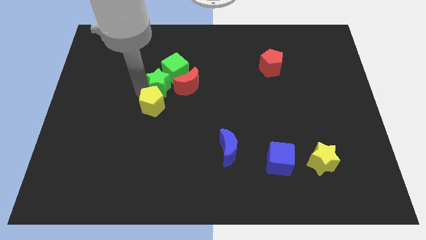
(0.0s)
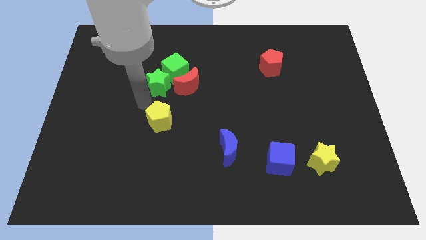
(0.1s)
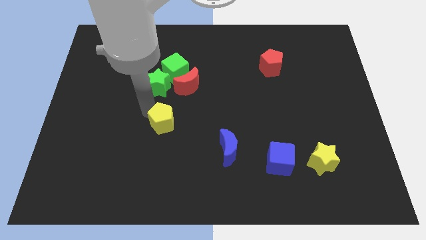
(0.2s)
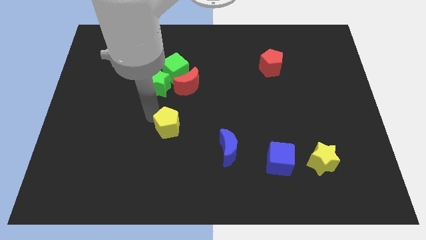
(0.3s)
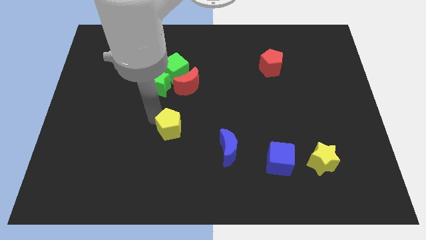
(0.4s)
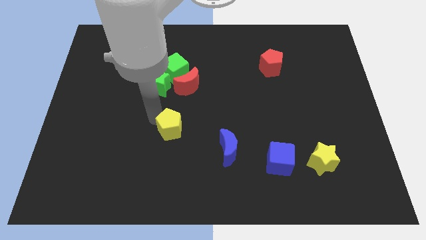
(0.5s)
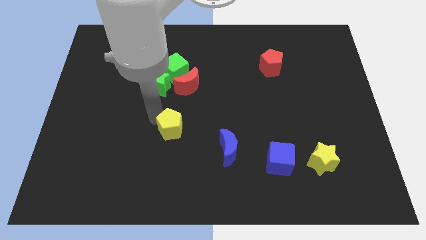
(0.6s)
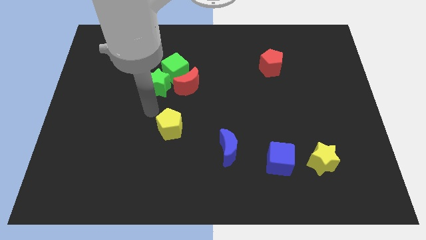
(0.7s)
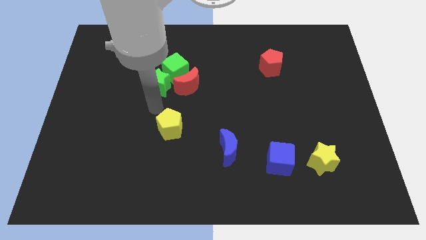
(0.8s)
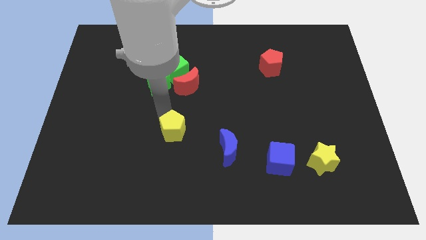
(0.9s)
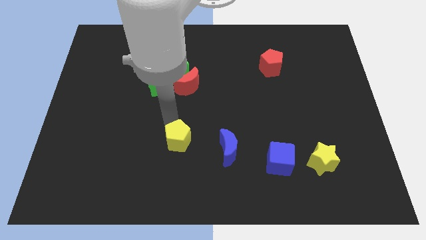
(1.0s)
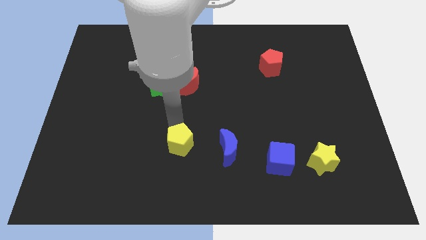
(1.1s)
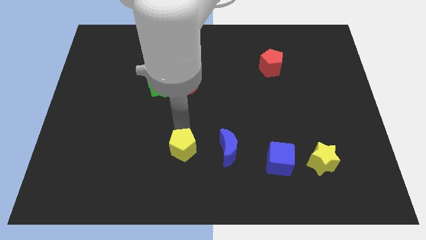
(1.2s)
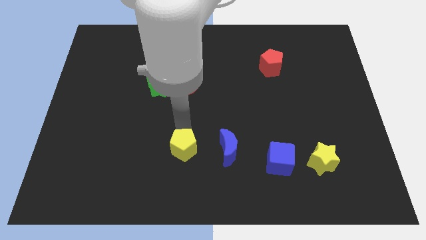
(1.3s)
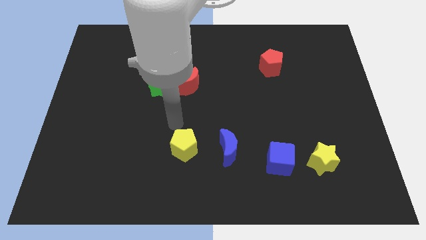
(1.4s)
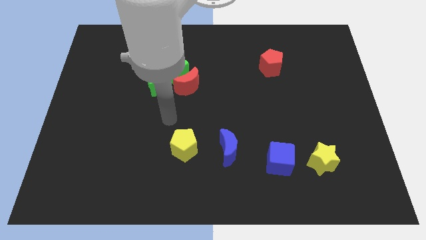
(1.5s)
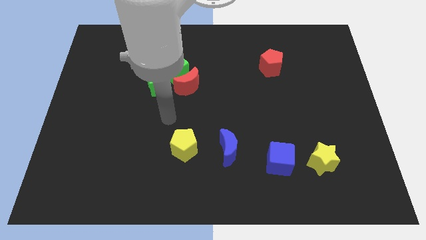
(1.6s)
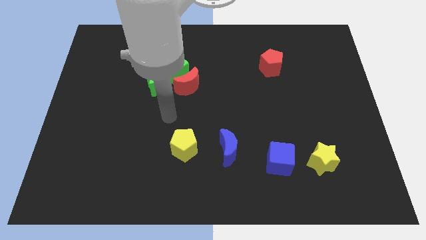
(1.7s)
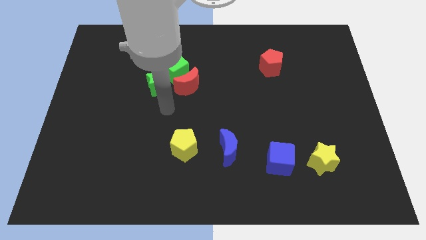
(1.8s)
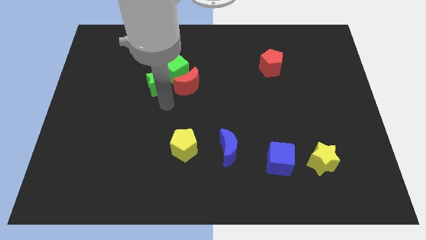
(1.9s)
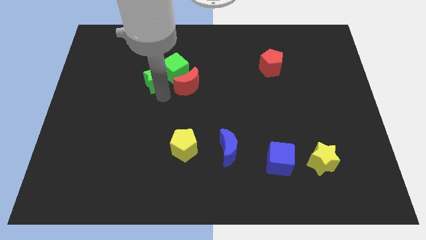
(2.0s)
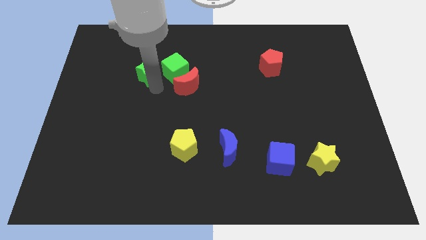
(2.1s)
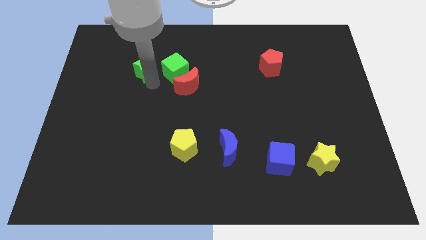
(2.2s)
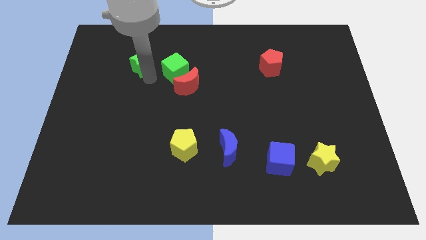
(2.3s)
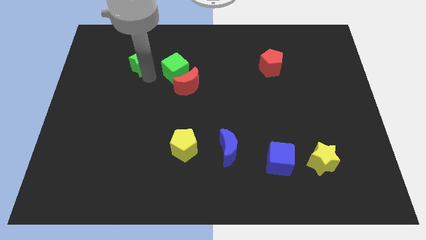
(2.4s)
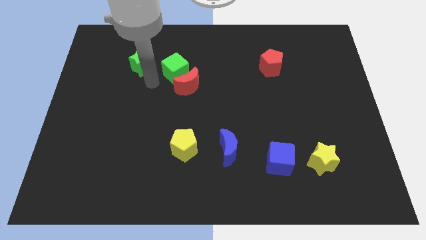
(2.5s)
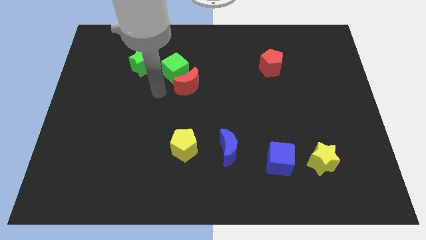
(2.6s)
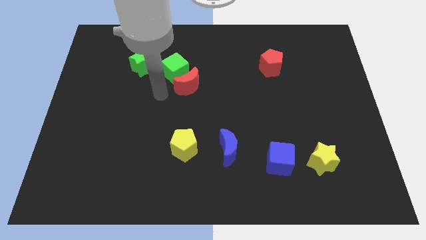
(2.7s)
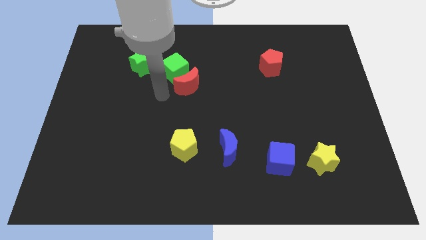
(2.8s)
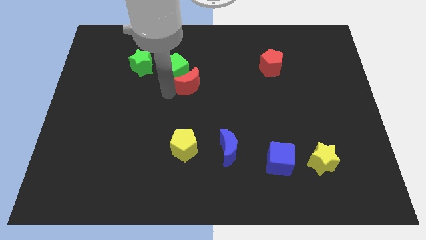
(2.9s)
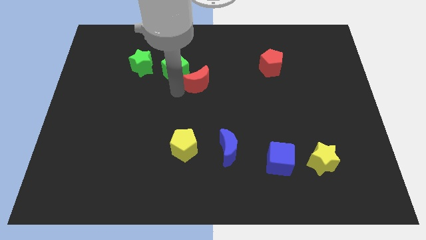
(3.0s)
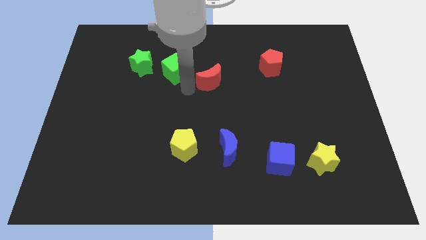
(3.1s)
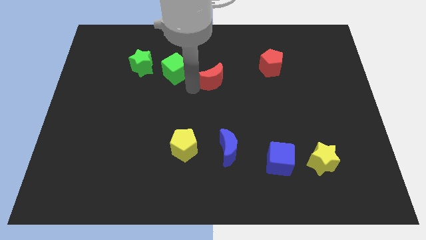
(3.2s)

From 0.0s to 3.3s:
move the yellow pentagon left side of the blue moon

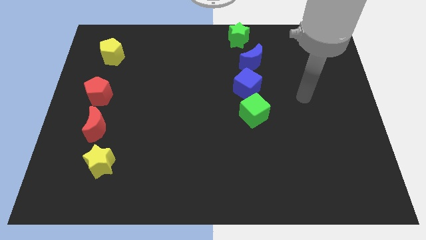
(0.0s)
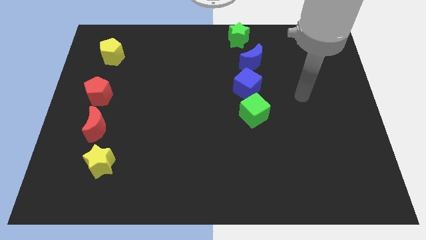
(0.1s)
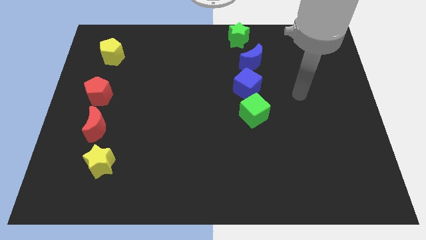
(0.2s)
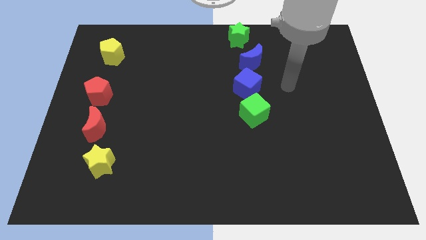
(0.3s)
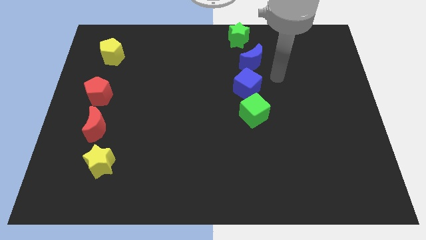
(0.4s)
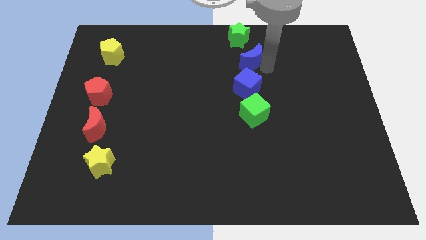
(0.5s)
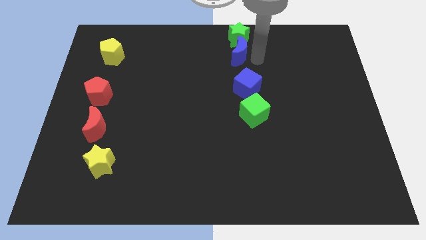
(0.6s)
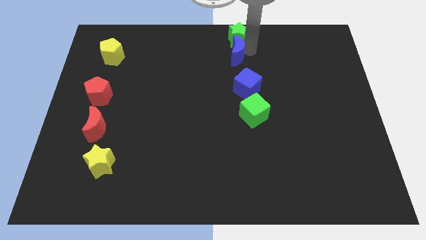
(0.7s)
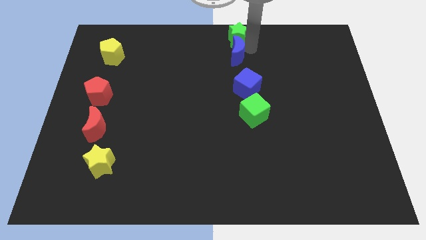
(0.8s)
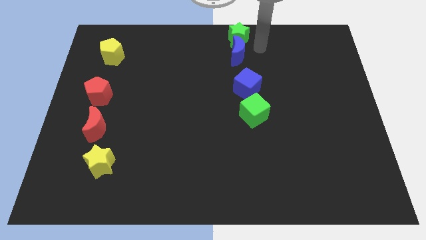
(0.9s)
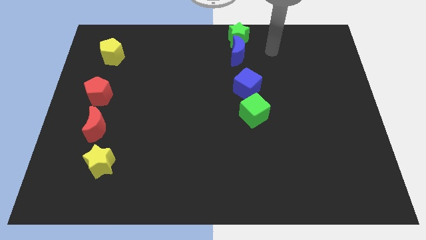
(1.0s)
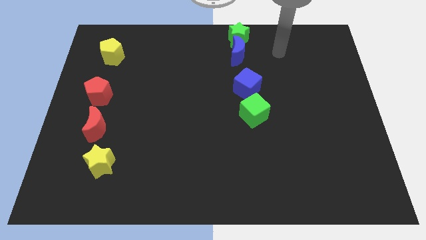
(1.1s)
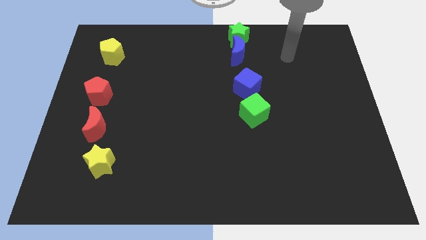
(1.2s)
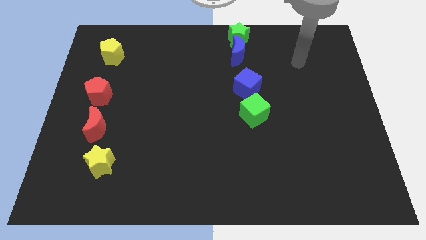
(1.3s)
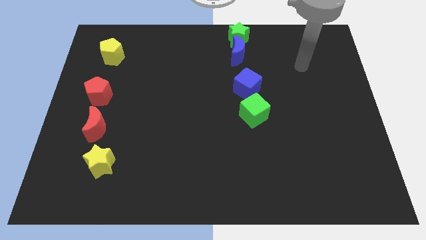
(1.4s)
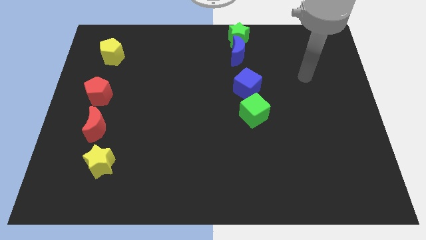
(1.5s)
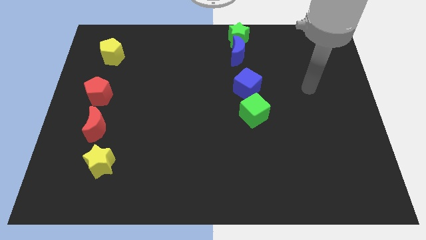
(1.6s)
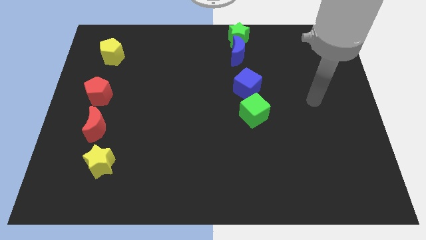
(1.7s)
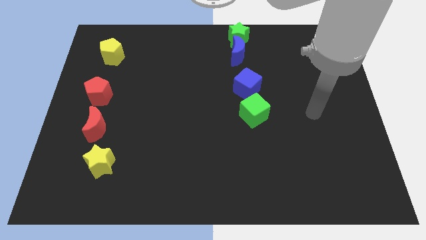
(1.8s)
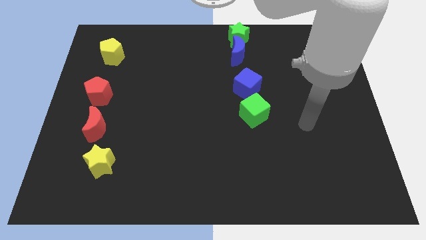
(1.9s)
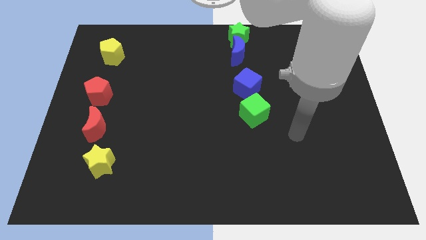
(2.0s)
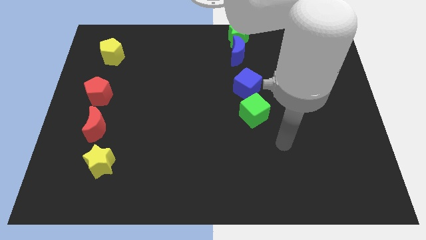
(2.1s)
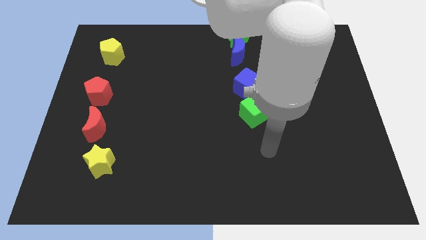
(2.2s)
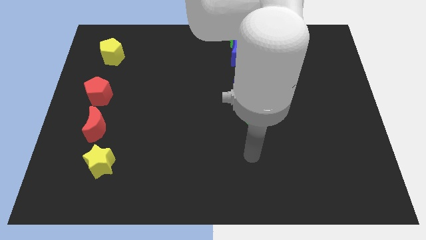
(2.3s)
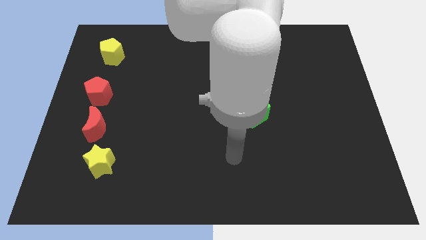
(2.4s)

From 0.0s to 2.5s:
slightly move the blue crescent to the left side

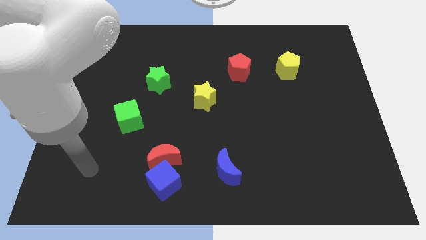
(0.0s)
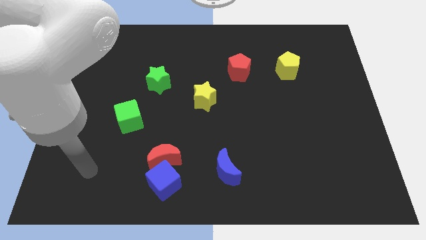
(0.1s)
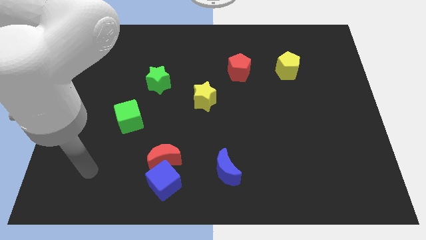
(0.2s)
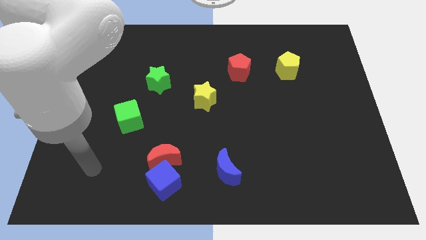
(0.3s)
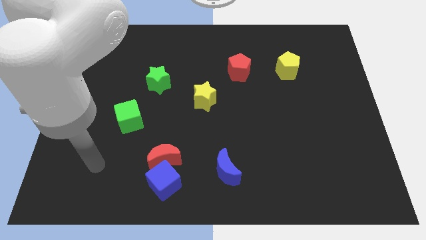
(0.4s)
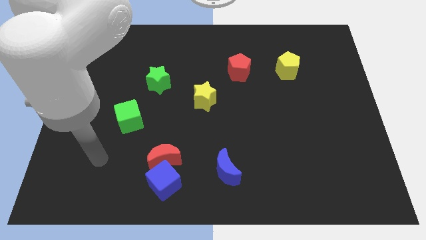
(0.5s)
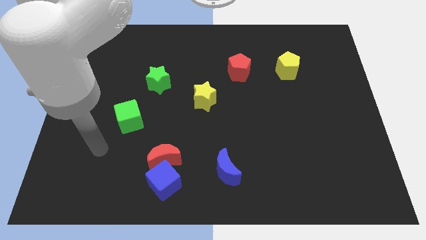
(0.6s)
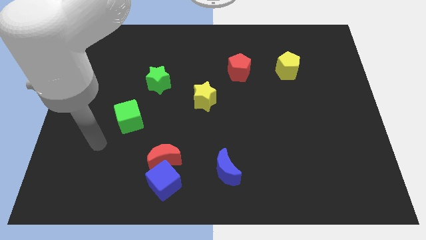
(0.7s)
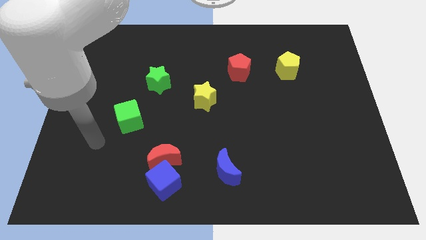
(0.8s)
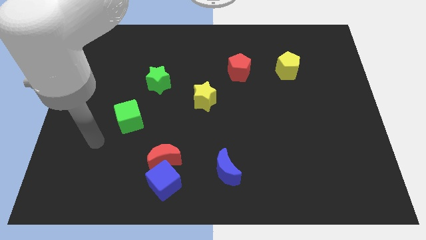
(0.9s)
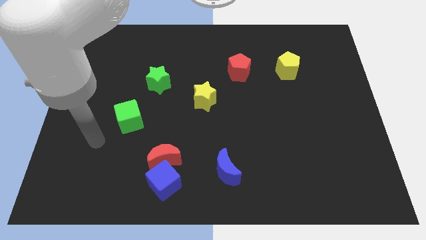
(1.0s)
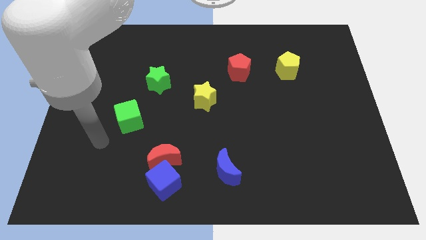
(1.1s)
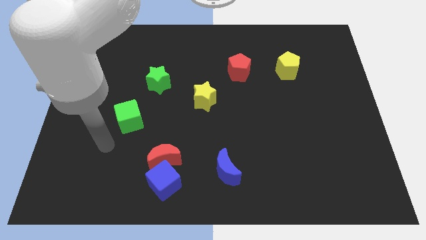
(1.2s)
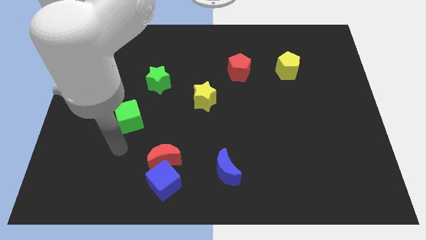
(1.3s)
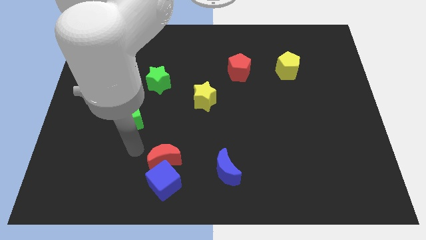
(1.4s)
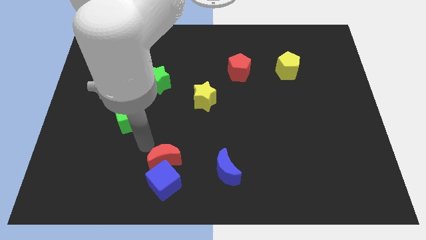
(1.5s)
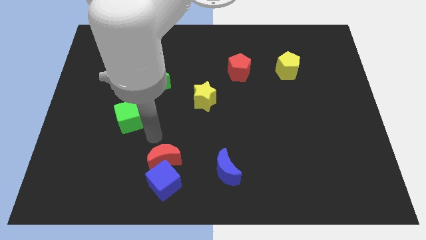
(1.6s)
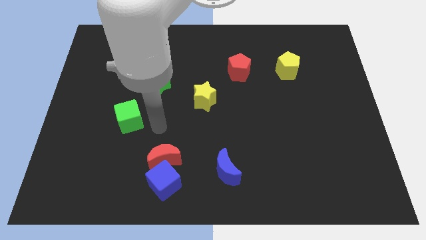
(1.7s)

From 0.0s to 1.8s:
place your arm at the top of red crescent

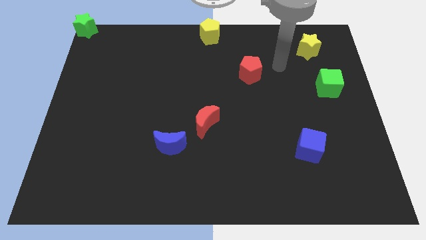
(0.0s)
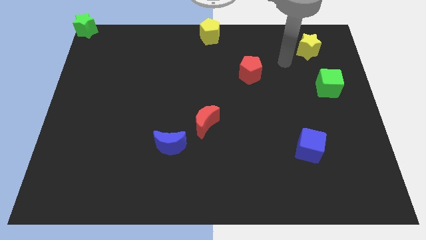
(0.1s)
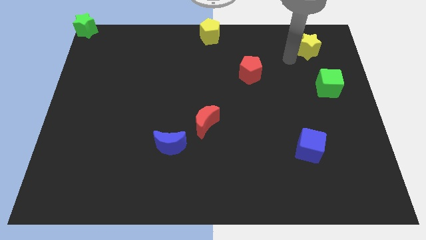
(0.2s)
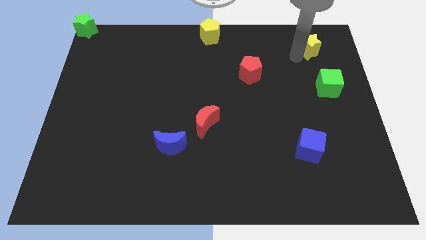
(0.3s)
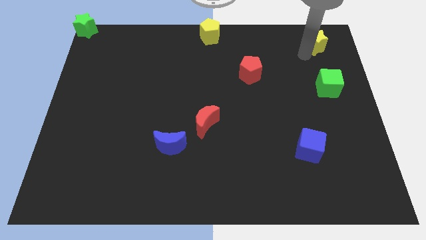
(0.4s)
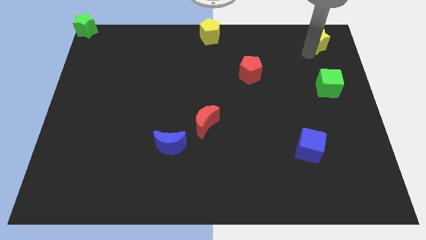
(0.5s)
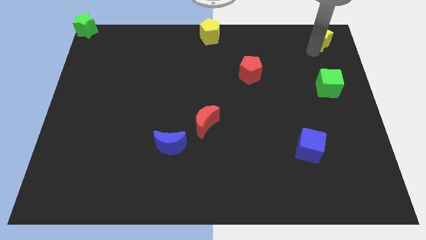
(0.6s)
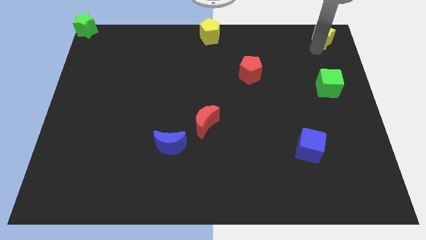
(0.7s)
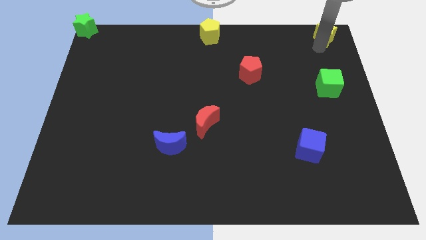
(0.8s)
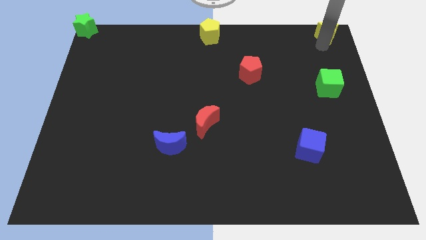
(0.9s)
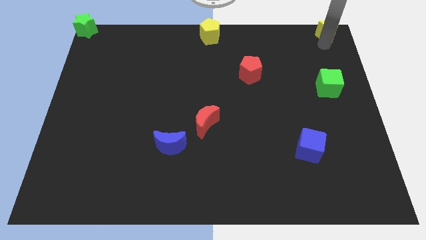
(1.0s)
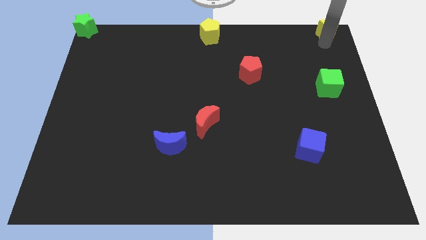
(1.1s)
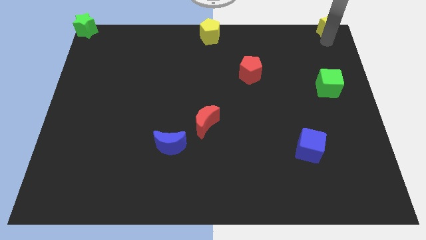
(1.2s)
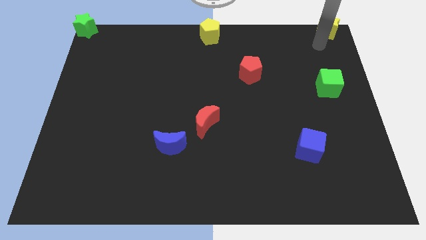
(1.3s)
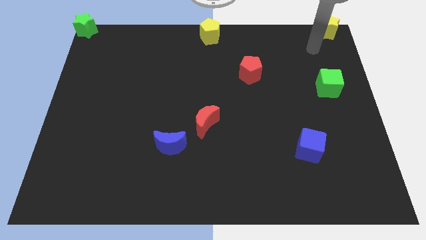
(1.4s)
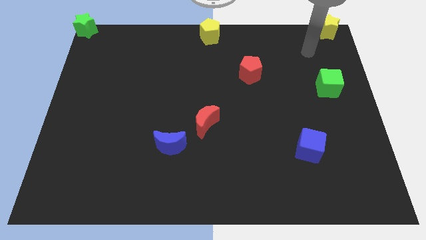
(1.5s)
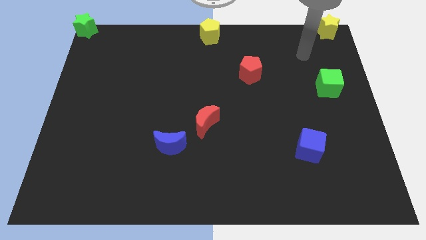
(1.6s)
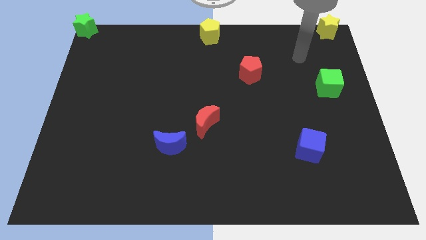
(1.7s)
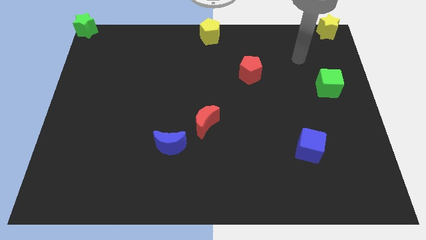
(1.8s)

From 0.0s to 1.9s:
move yellow star to the top right
